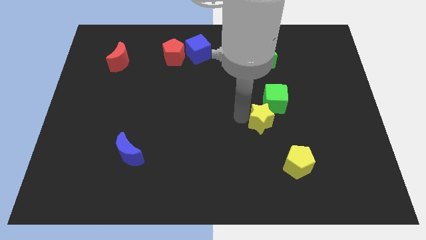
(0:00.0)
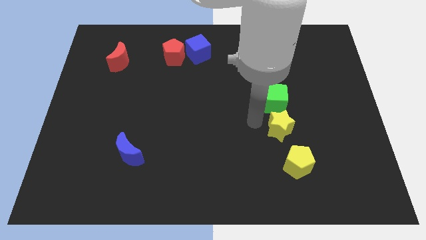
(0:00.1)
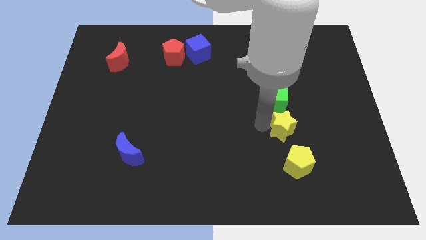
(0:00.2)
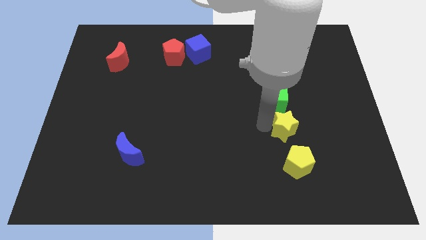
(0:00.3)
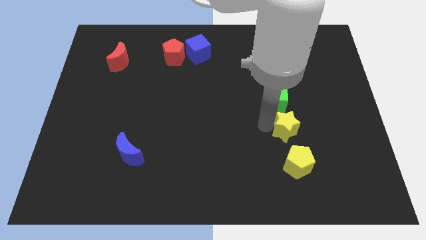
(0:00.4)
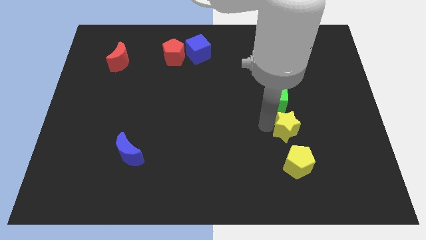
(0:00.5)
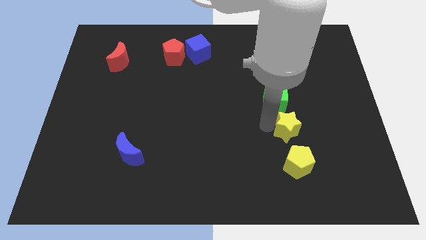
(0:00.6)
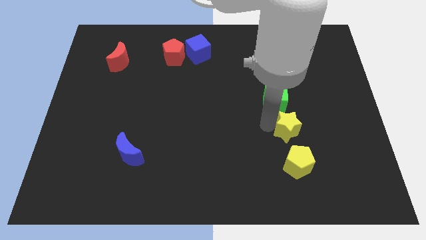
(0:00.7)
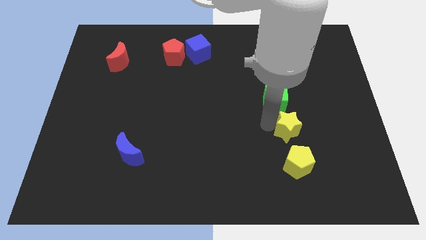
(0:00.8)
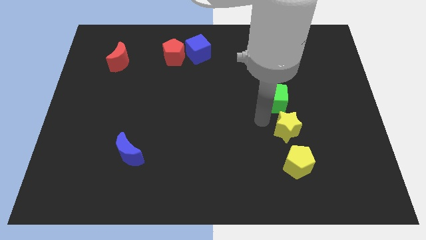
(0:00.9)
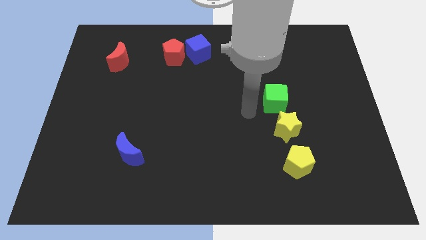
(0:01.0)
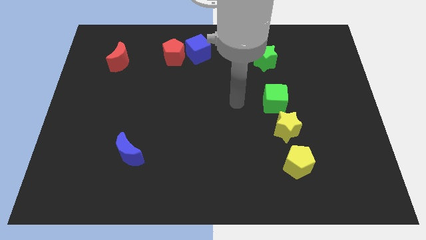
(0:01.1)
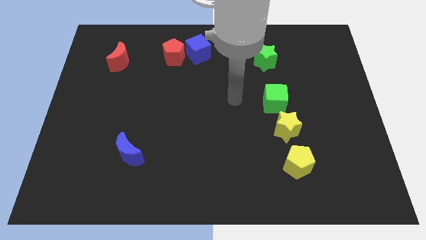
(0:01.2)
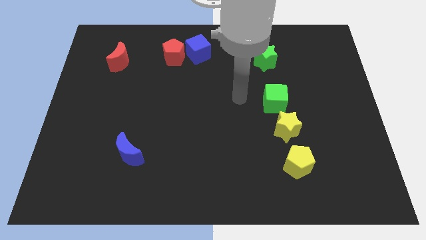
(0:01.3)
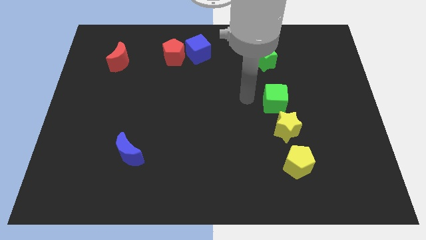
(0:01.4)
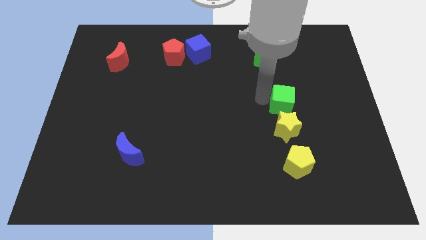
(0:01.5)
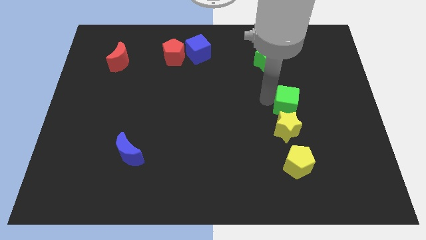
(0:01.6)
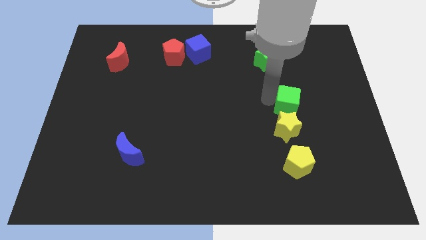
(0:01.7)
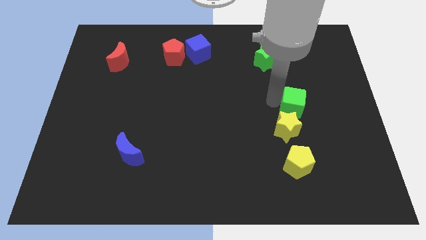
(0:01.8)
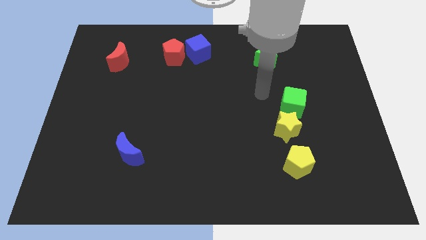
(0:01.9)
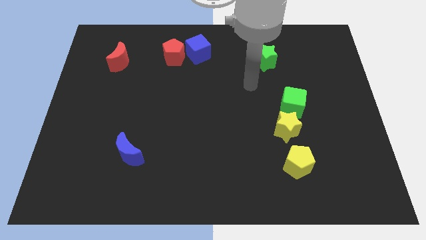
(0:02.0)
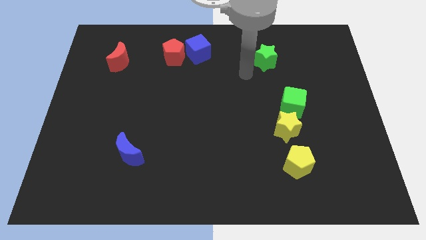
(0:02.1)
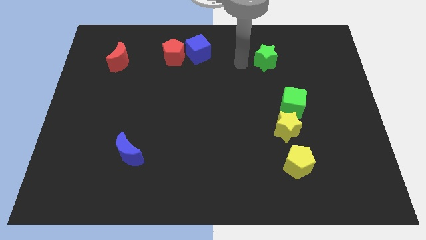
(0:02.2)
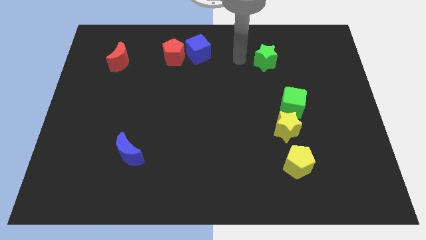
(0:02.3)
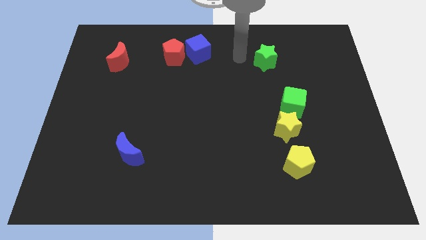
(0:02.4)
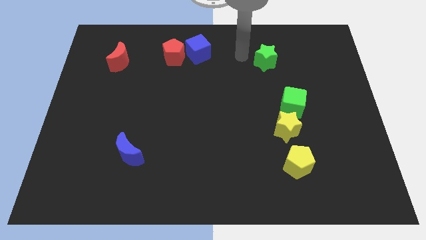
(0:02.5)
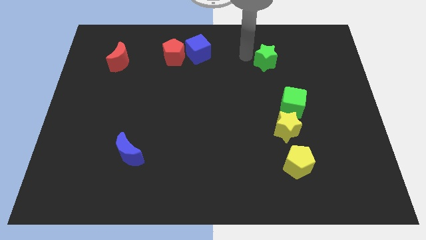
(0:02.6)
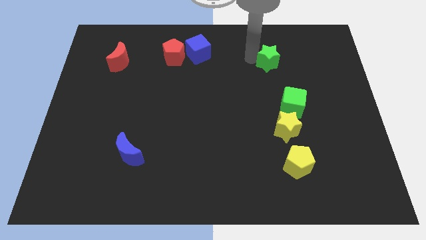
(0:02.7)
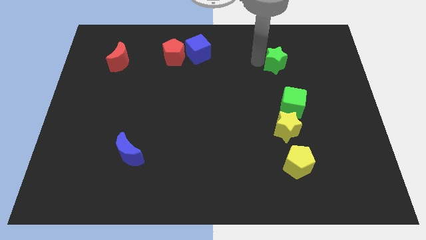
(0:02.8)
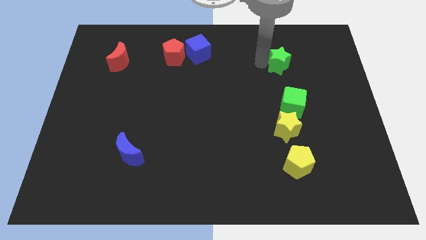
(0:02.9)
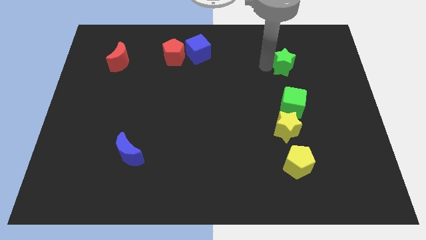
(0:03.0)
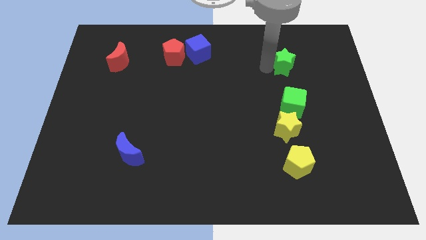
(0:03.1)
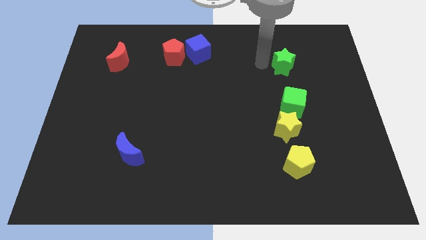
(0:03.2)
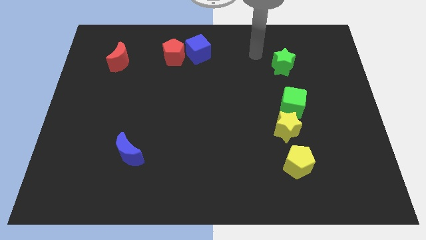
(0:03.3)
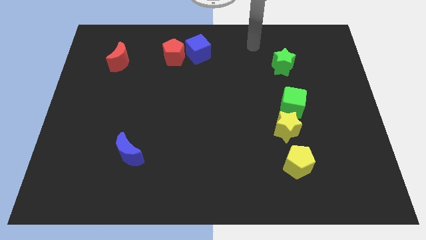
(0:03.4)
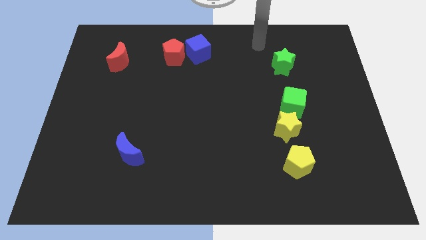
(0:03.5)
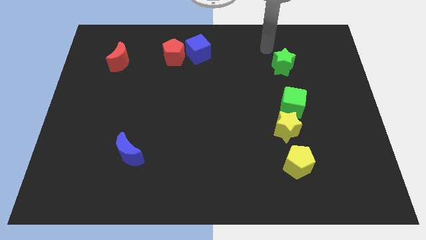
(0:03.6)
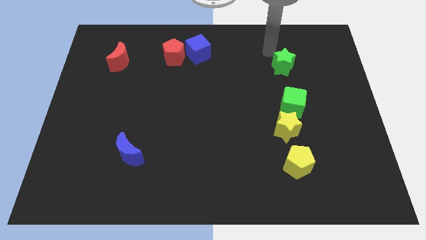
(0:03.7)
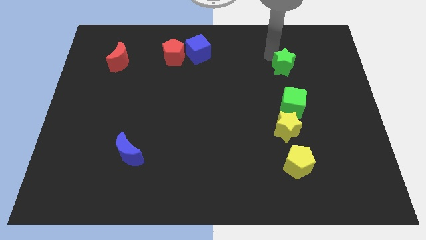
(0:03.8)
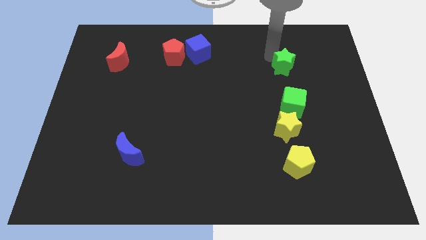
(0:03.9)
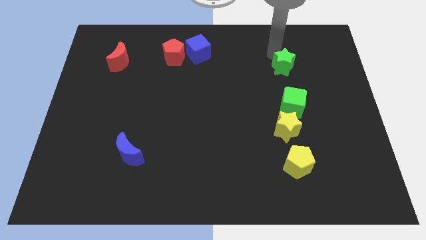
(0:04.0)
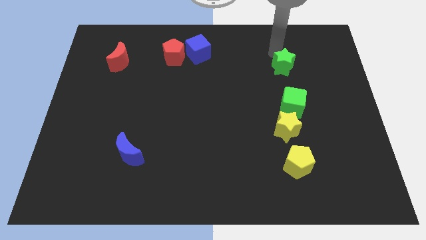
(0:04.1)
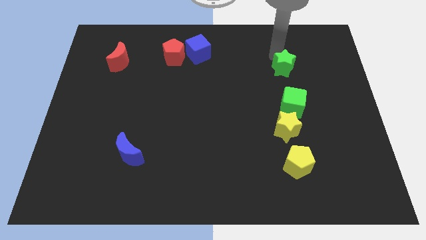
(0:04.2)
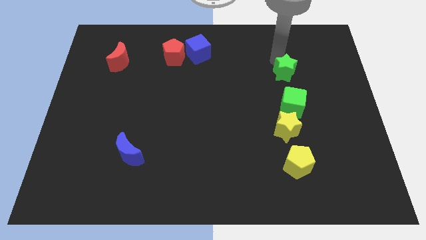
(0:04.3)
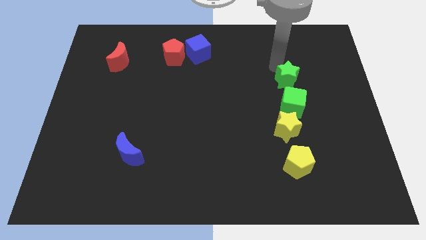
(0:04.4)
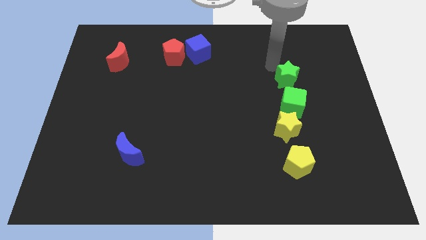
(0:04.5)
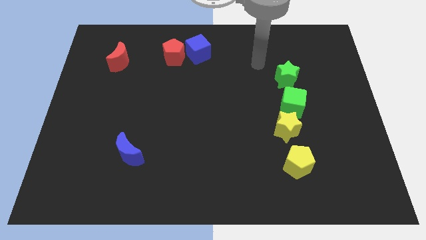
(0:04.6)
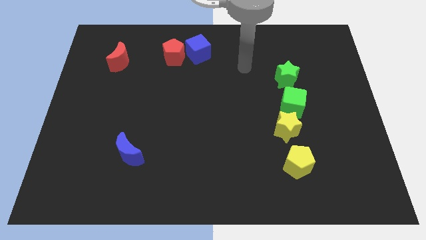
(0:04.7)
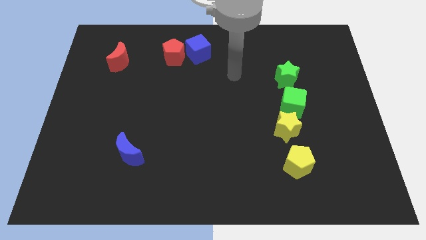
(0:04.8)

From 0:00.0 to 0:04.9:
move green blocks and yellow blocks in a vertical row

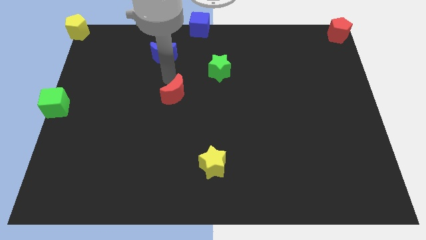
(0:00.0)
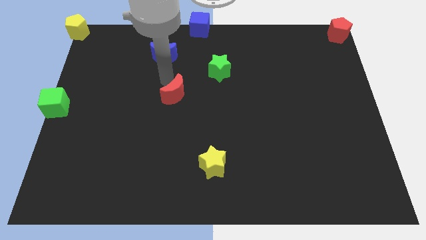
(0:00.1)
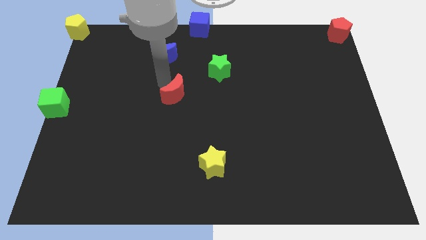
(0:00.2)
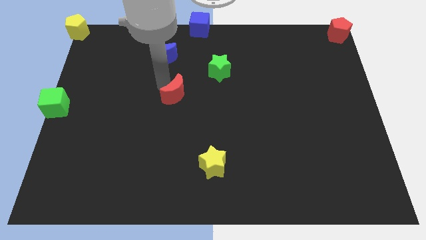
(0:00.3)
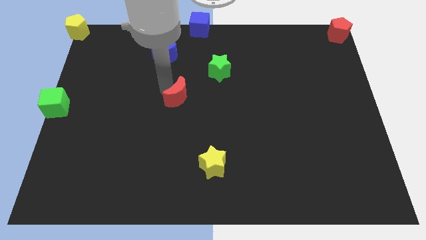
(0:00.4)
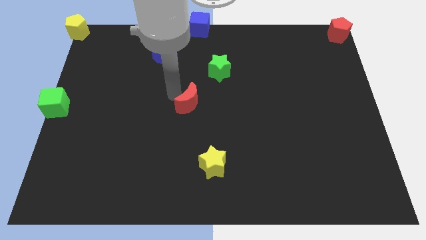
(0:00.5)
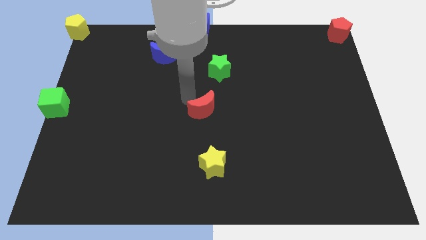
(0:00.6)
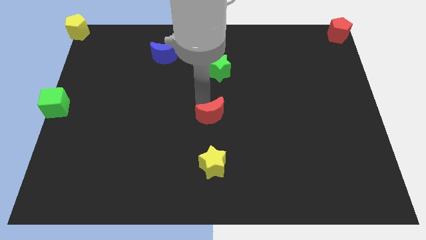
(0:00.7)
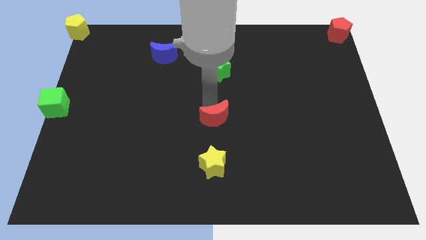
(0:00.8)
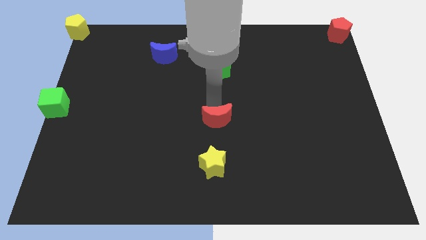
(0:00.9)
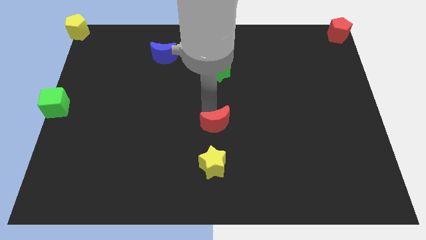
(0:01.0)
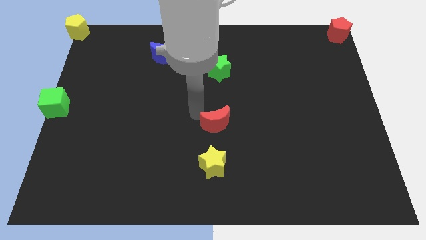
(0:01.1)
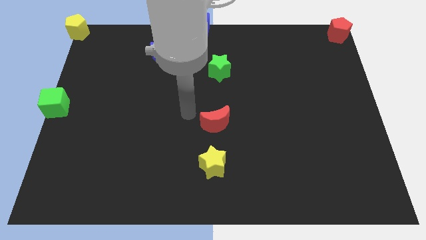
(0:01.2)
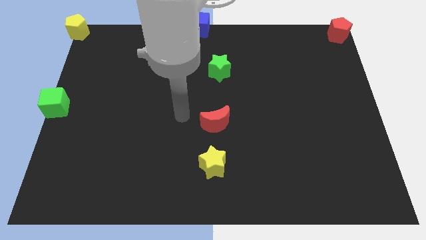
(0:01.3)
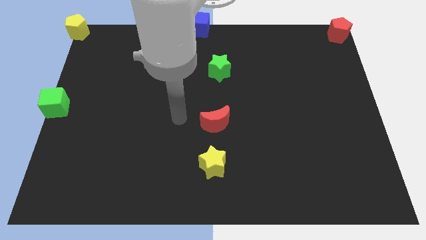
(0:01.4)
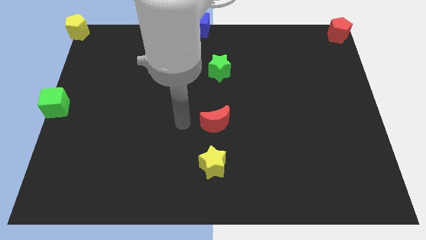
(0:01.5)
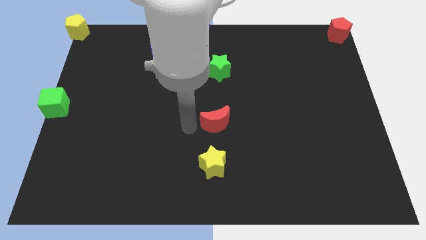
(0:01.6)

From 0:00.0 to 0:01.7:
place the red moon in between the green star and yellow star

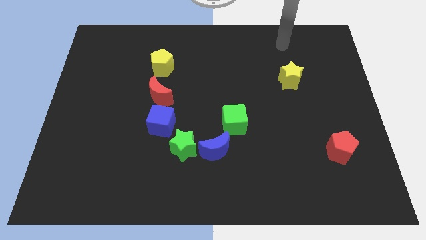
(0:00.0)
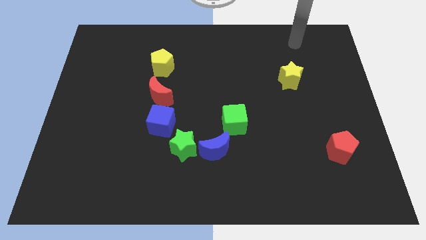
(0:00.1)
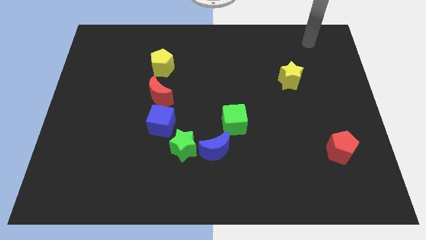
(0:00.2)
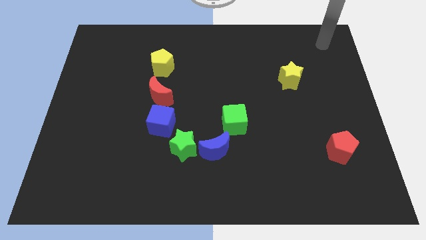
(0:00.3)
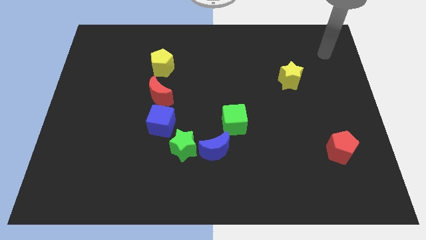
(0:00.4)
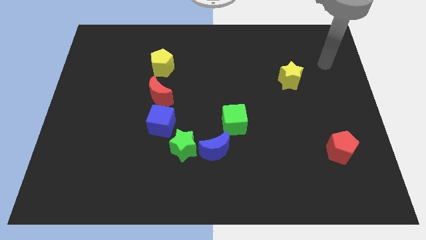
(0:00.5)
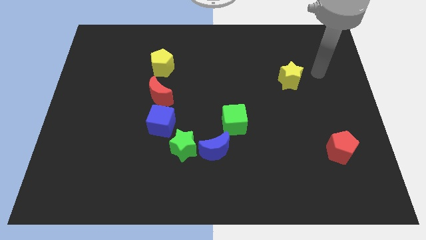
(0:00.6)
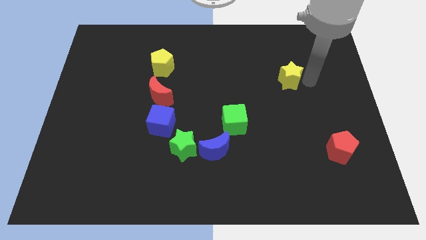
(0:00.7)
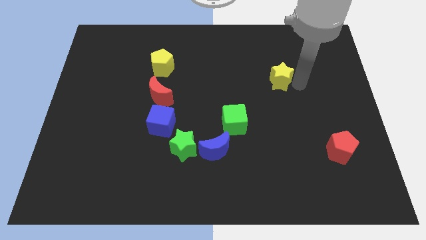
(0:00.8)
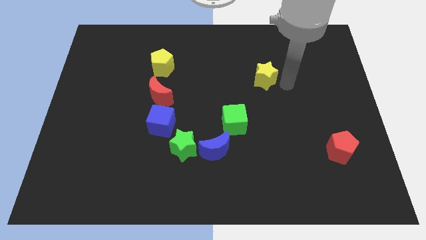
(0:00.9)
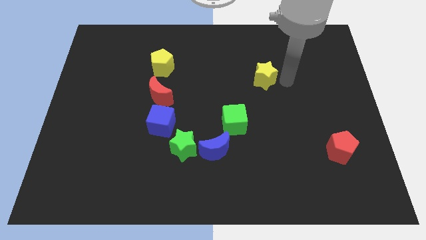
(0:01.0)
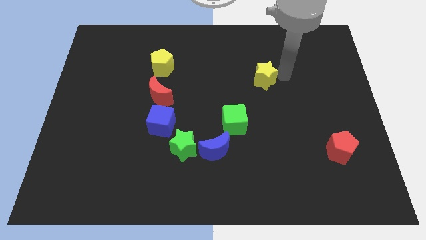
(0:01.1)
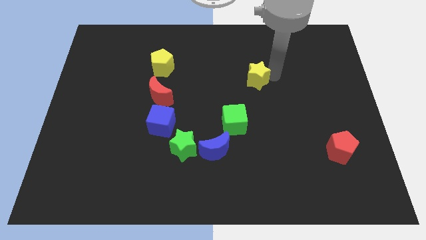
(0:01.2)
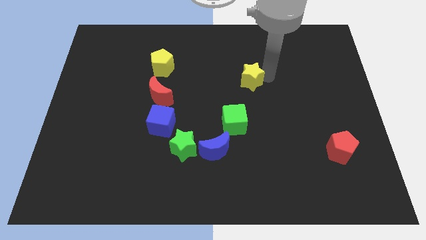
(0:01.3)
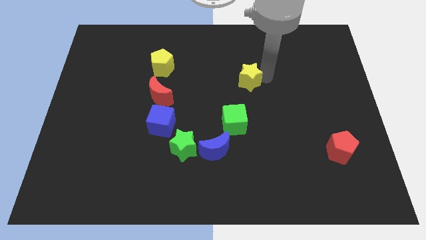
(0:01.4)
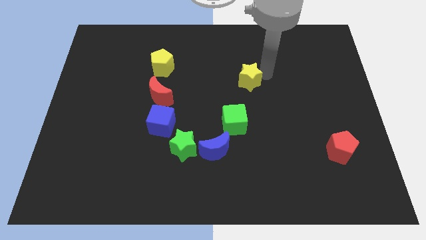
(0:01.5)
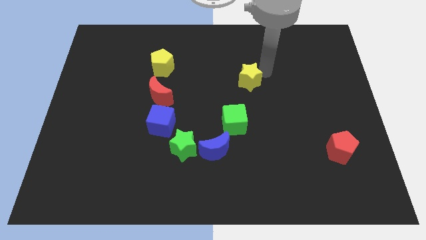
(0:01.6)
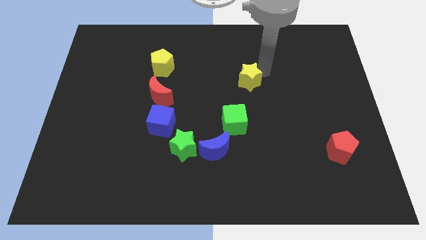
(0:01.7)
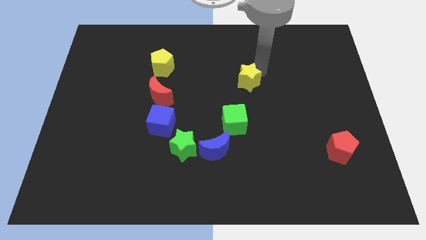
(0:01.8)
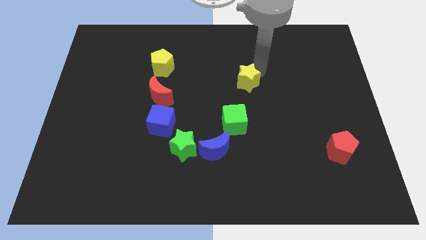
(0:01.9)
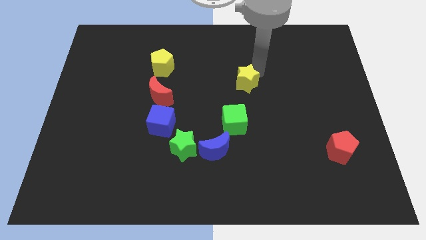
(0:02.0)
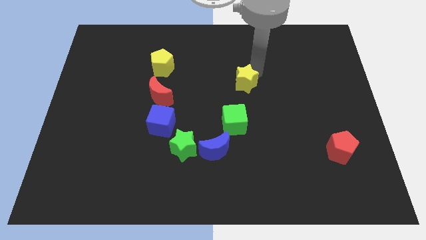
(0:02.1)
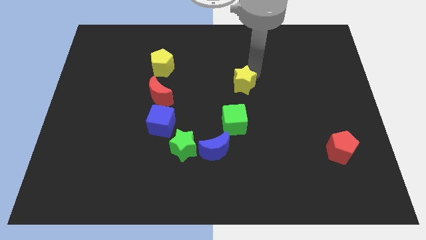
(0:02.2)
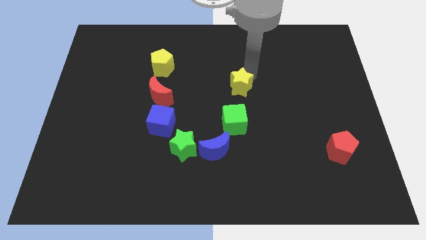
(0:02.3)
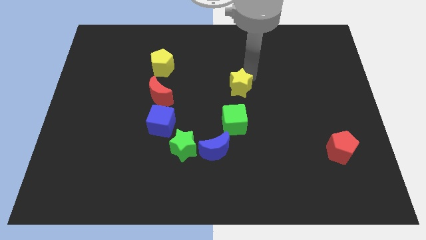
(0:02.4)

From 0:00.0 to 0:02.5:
move the yellow star to the top of the green cube
